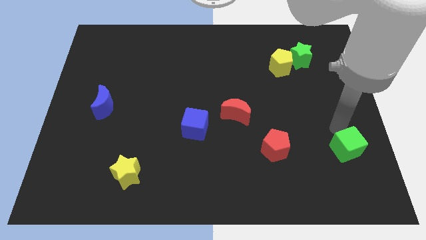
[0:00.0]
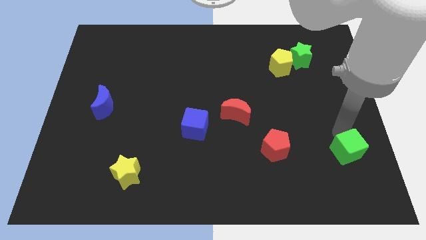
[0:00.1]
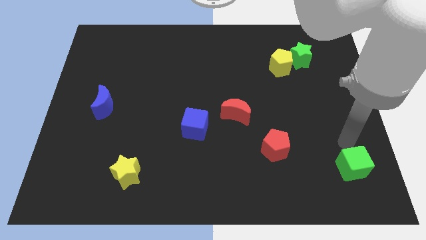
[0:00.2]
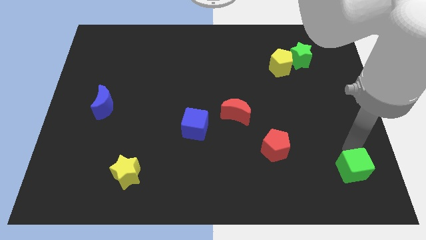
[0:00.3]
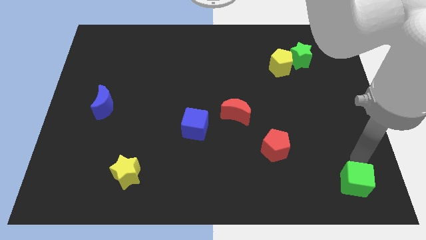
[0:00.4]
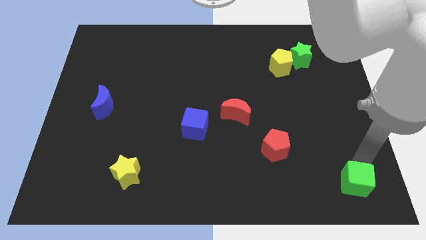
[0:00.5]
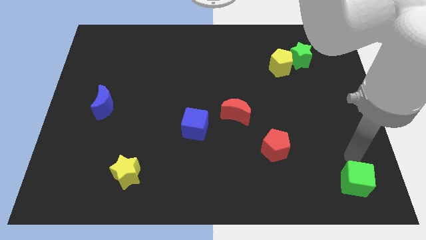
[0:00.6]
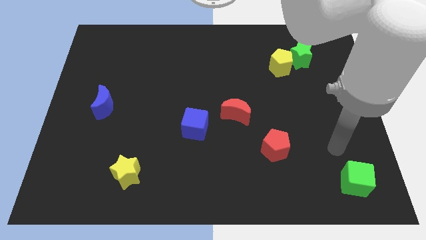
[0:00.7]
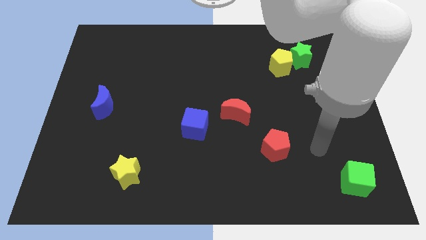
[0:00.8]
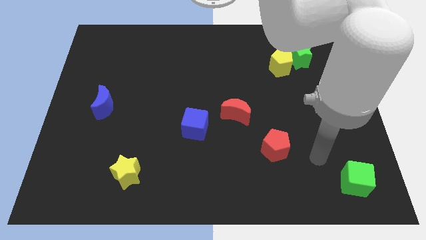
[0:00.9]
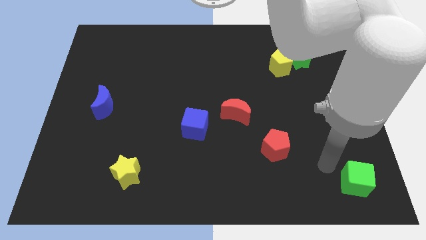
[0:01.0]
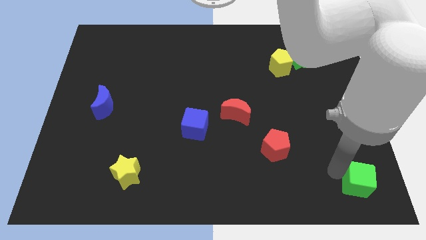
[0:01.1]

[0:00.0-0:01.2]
move green cube to the right bottom

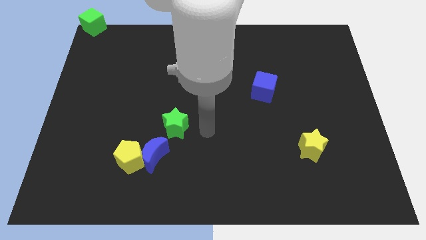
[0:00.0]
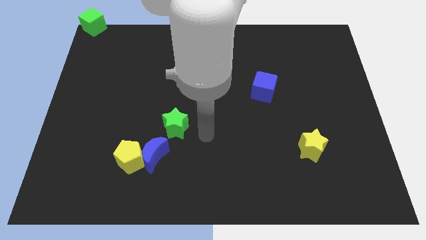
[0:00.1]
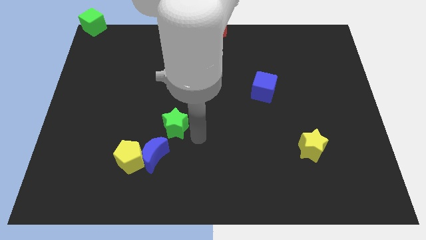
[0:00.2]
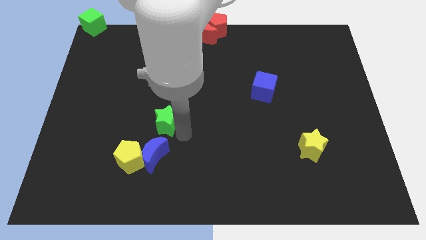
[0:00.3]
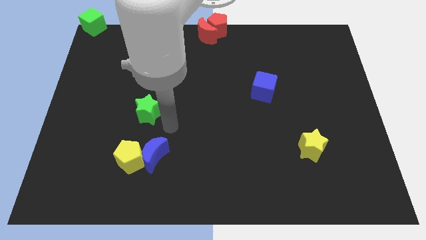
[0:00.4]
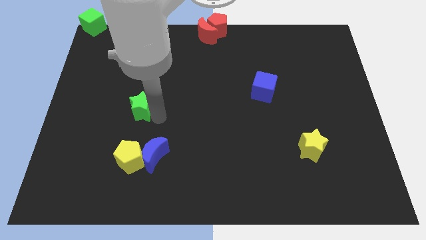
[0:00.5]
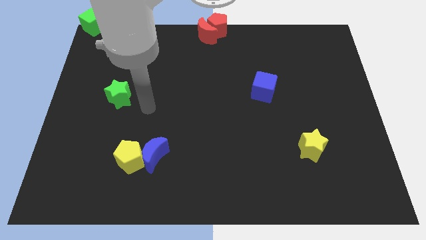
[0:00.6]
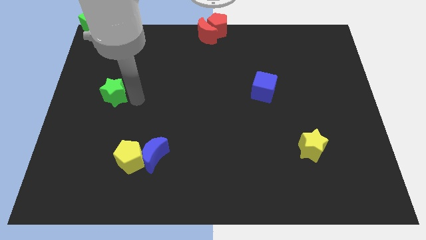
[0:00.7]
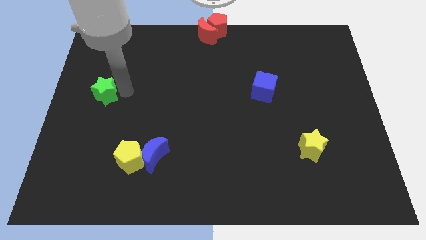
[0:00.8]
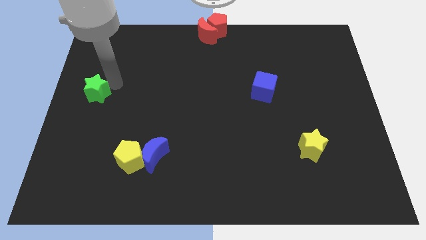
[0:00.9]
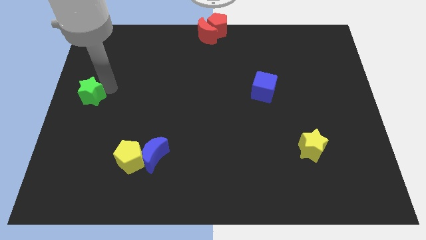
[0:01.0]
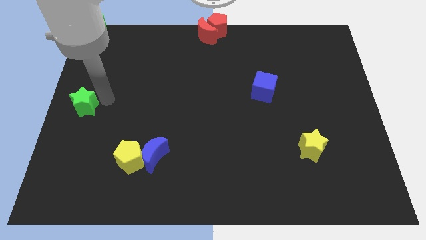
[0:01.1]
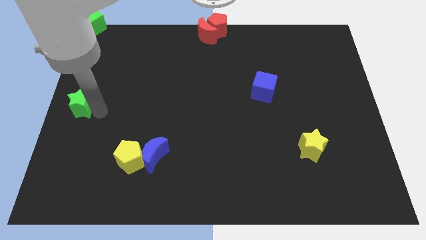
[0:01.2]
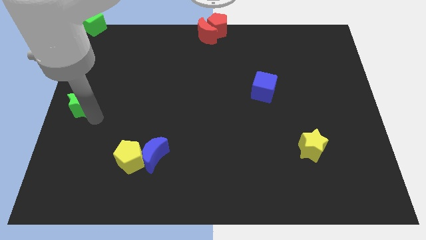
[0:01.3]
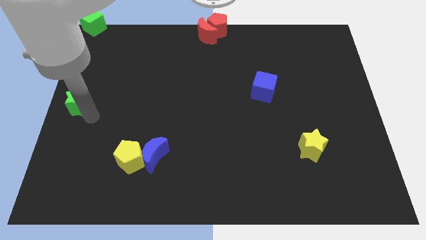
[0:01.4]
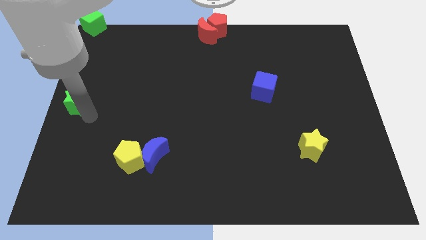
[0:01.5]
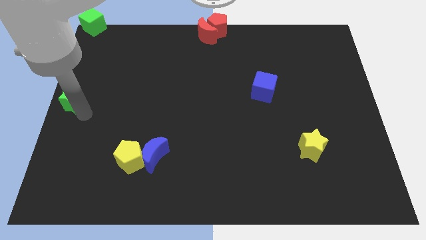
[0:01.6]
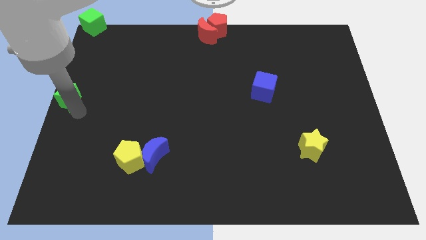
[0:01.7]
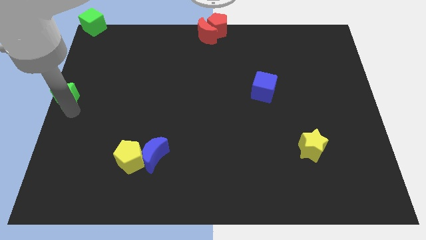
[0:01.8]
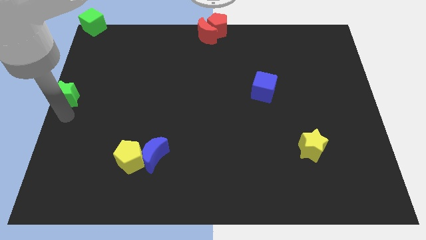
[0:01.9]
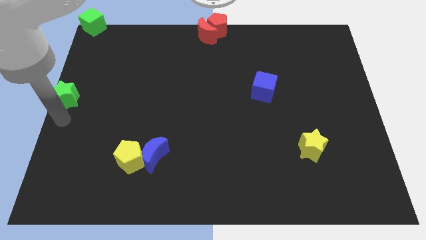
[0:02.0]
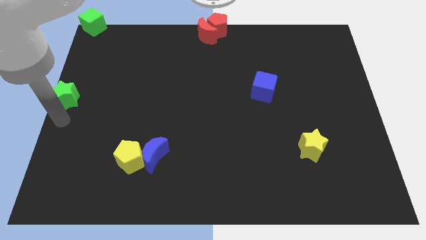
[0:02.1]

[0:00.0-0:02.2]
move the green star to the left center of the board

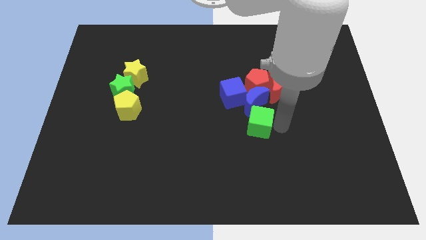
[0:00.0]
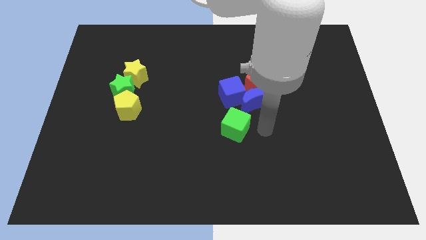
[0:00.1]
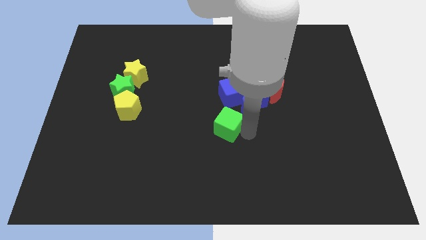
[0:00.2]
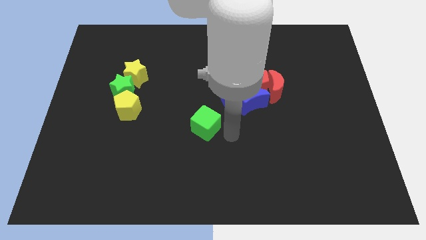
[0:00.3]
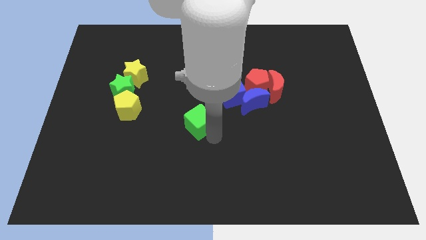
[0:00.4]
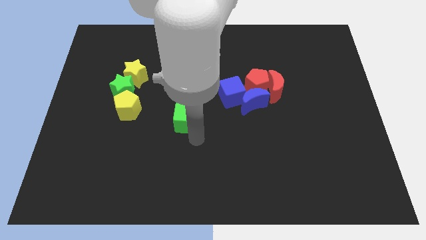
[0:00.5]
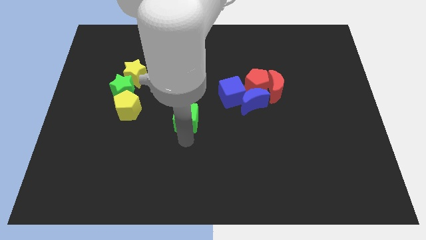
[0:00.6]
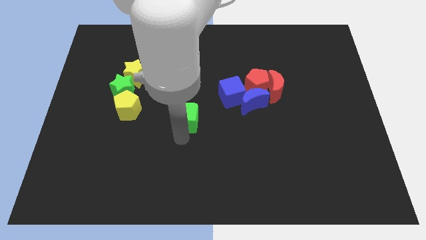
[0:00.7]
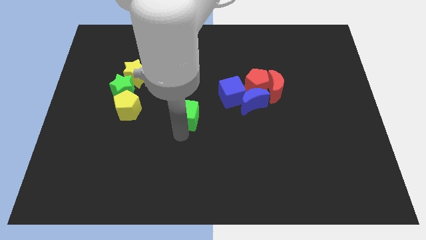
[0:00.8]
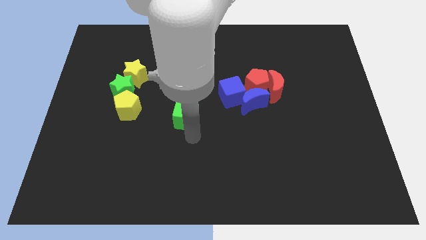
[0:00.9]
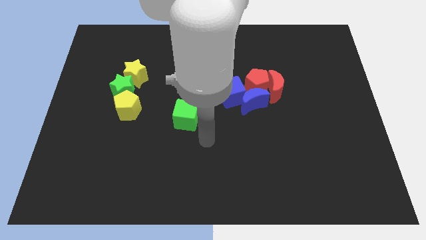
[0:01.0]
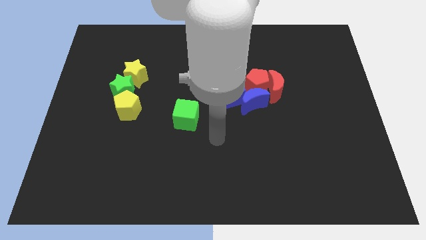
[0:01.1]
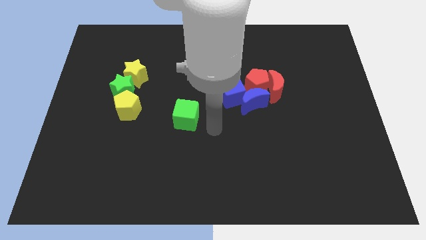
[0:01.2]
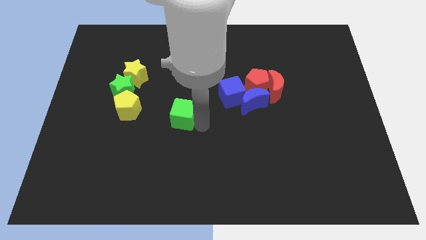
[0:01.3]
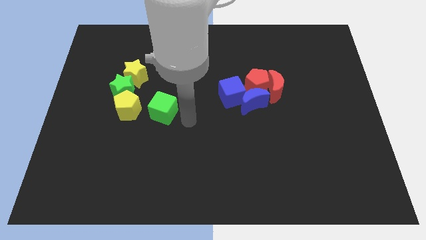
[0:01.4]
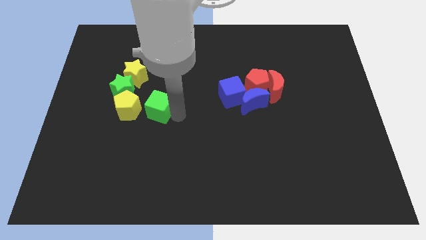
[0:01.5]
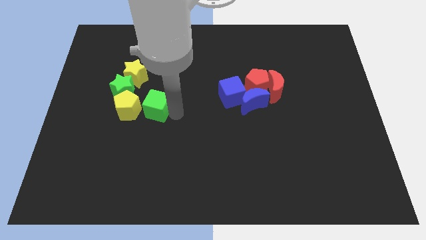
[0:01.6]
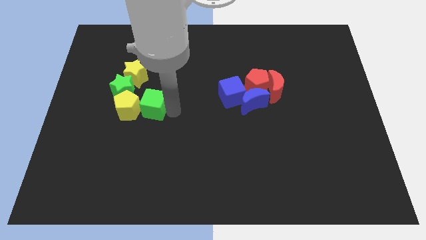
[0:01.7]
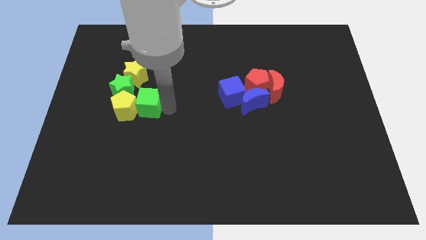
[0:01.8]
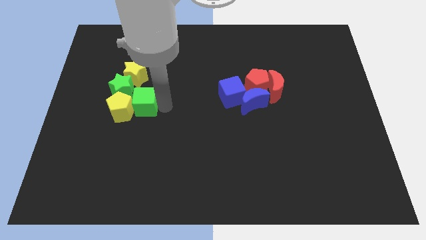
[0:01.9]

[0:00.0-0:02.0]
place the green cube close to the green star

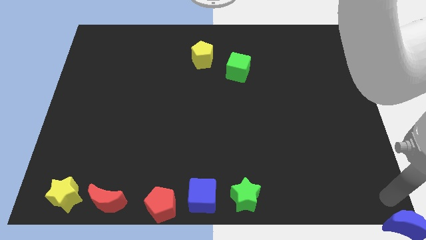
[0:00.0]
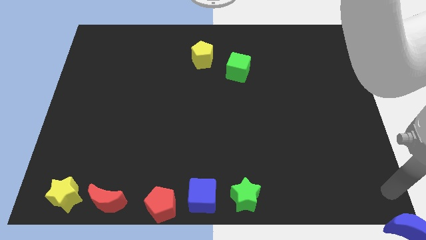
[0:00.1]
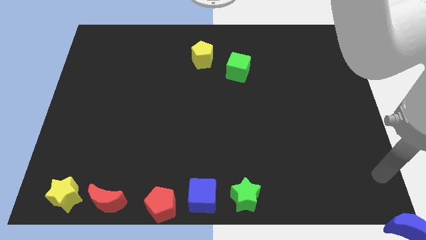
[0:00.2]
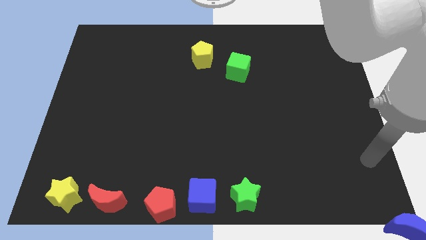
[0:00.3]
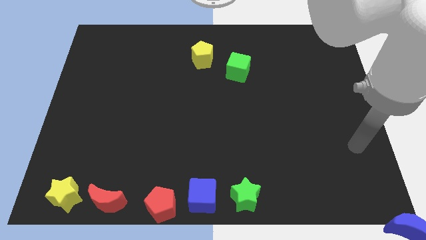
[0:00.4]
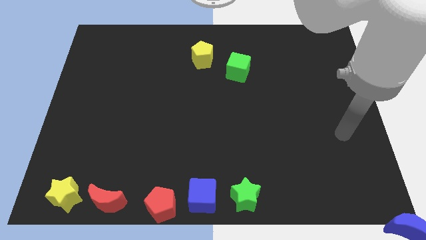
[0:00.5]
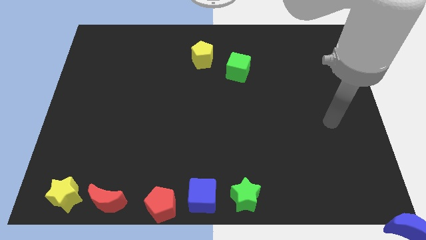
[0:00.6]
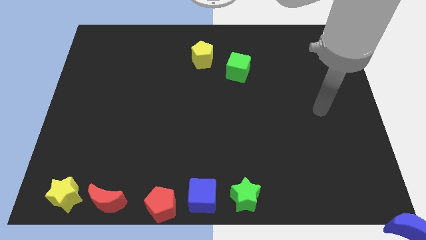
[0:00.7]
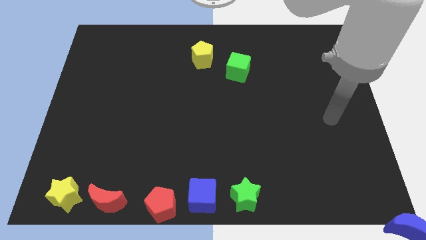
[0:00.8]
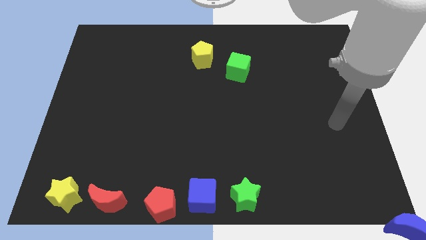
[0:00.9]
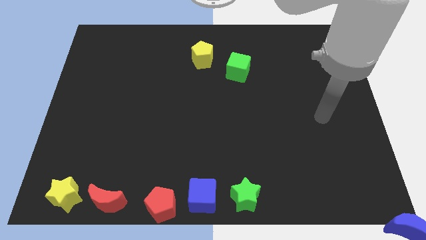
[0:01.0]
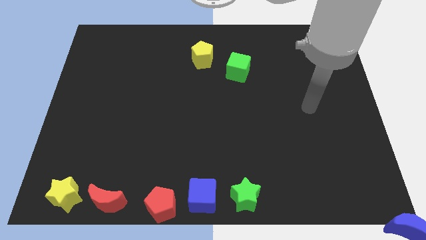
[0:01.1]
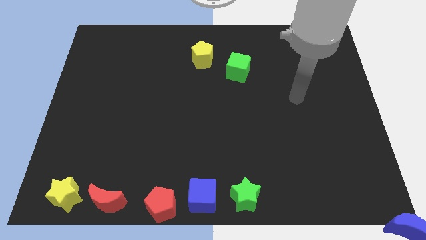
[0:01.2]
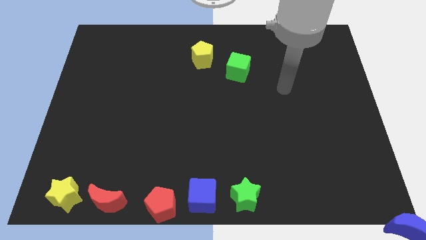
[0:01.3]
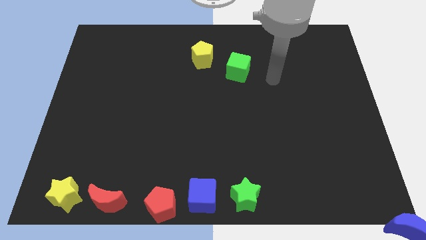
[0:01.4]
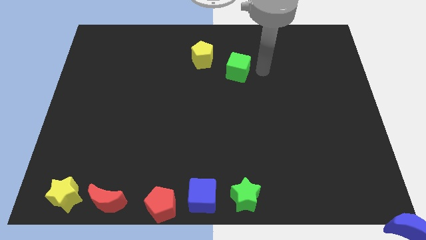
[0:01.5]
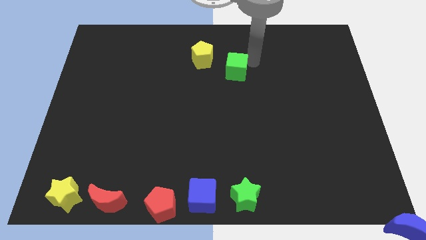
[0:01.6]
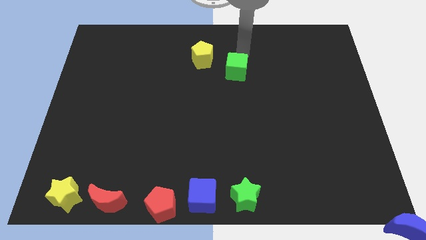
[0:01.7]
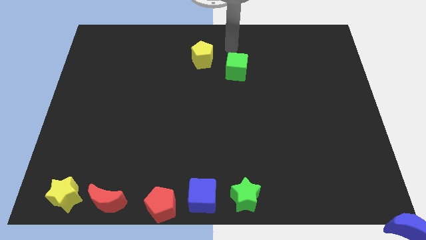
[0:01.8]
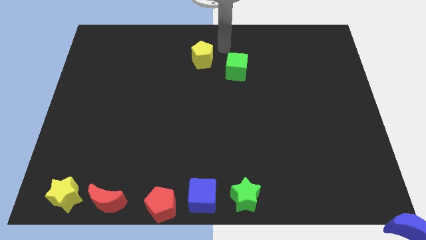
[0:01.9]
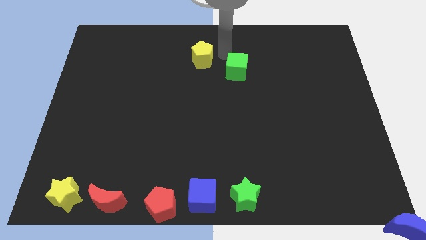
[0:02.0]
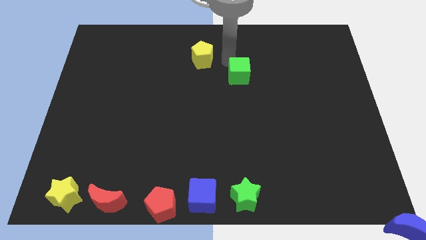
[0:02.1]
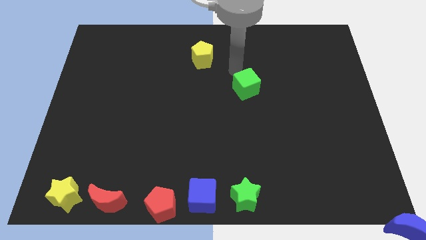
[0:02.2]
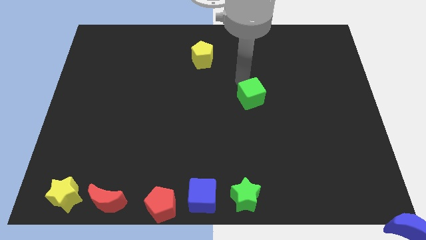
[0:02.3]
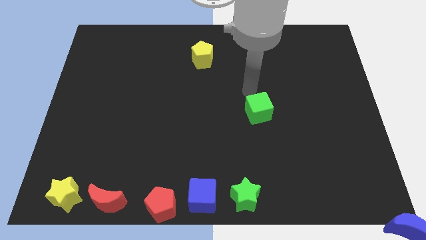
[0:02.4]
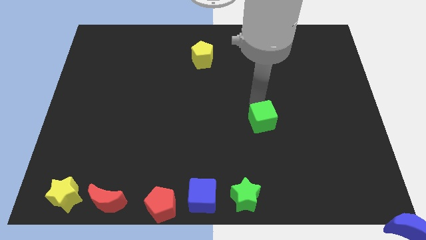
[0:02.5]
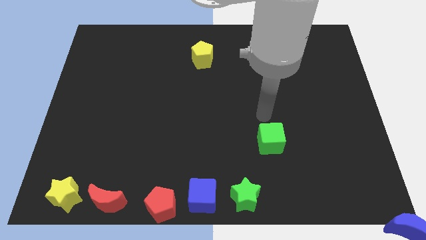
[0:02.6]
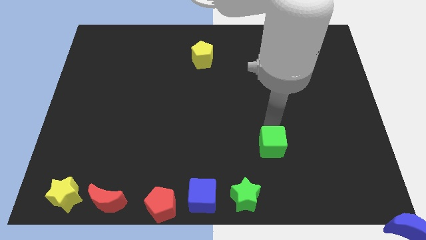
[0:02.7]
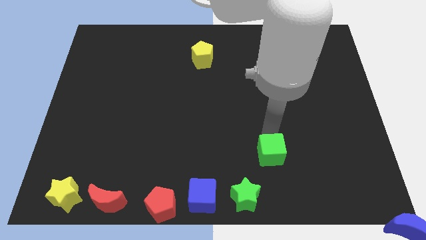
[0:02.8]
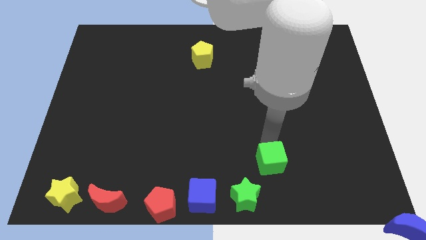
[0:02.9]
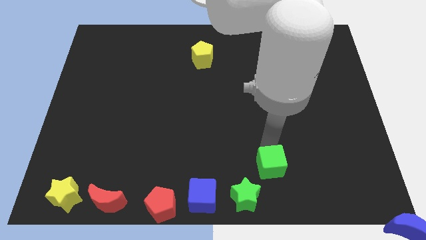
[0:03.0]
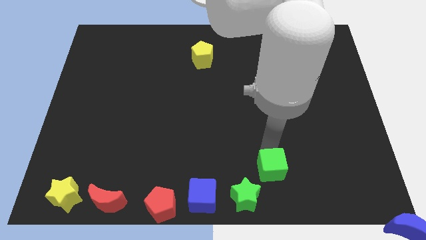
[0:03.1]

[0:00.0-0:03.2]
push the green cube to the bottom side

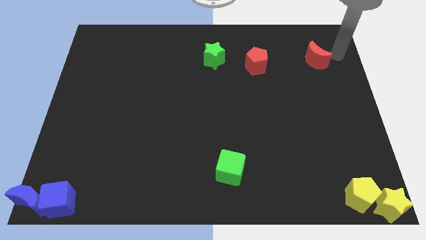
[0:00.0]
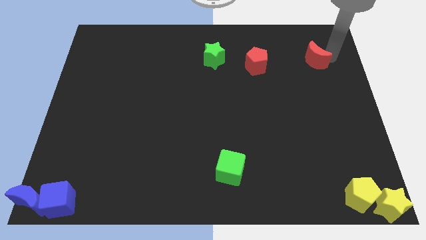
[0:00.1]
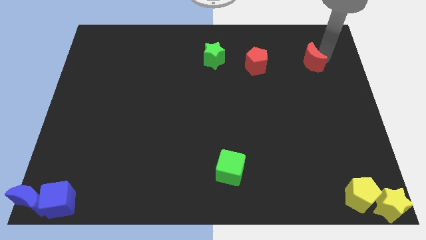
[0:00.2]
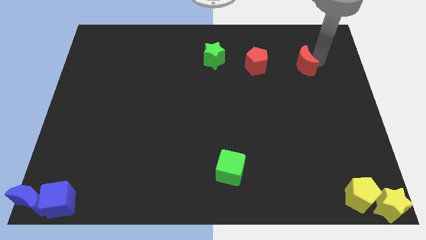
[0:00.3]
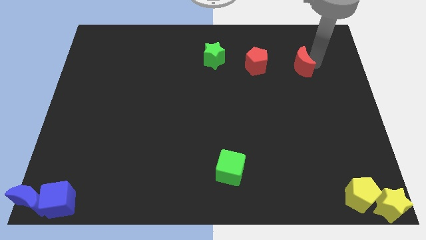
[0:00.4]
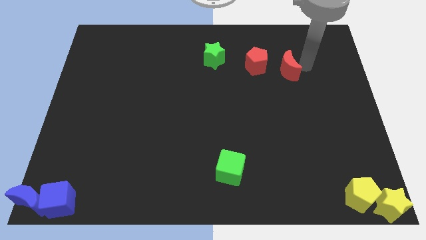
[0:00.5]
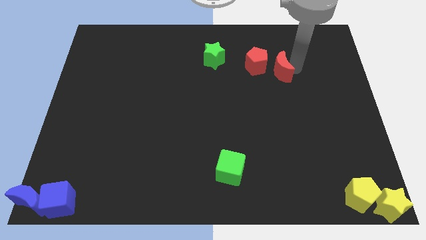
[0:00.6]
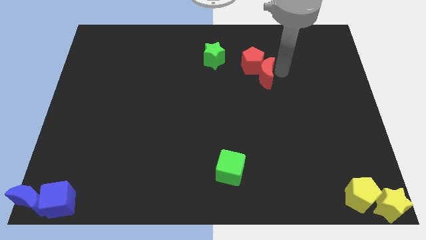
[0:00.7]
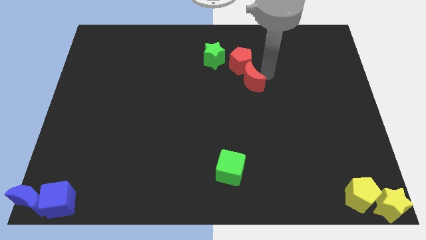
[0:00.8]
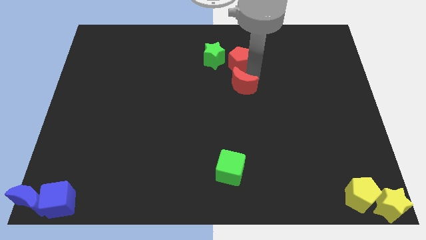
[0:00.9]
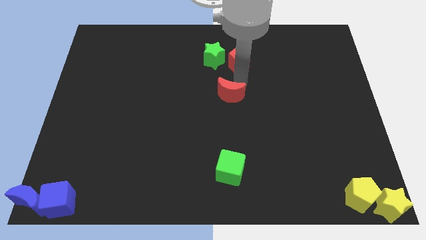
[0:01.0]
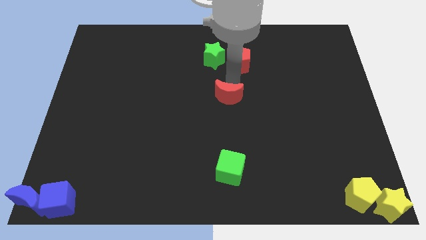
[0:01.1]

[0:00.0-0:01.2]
place the red crescent vertically below the red pentagon
